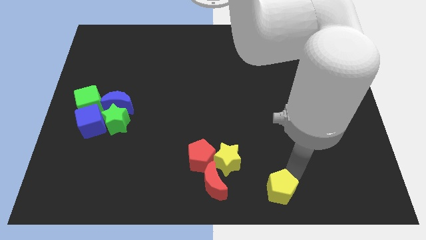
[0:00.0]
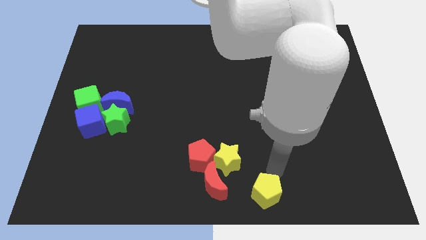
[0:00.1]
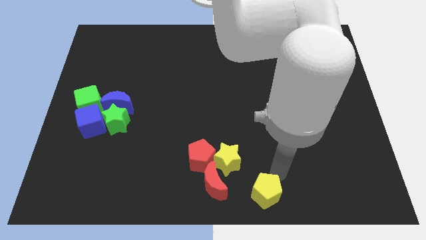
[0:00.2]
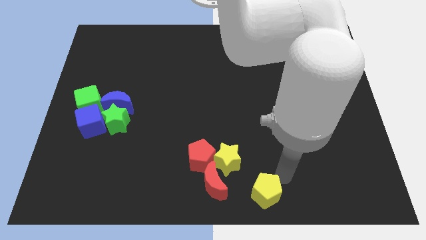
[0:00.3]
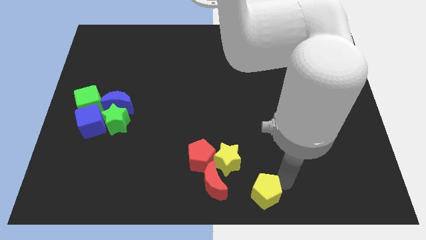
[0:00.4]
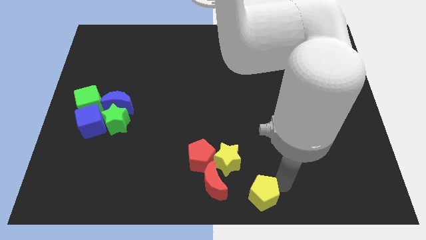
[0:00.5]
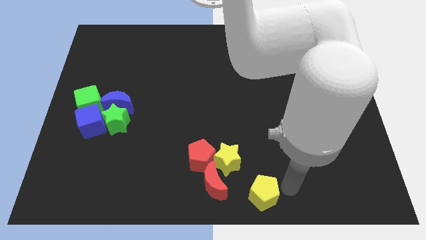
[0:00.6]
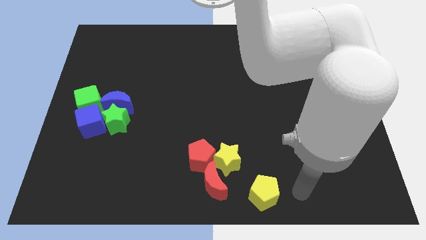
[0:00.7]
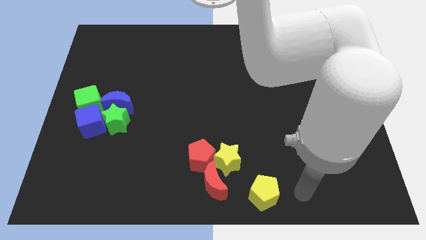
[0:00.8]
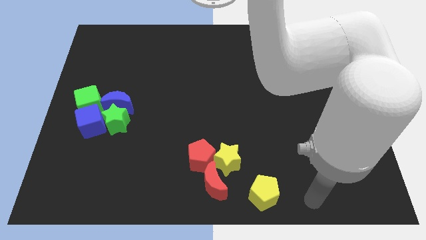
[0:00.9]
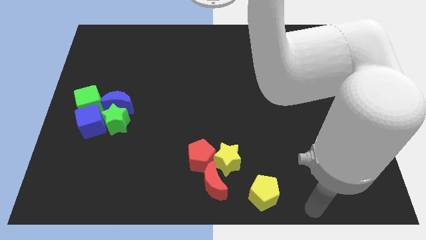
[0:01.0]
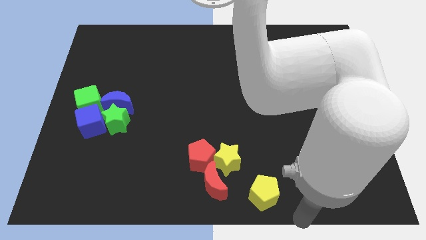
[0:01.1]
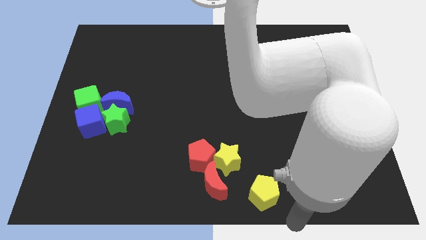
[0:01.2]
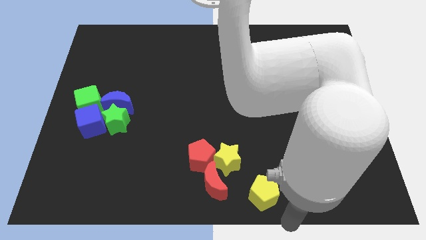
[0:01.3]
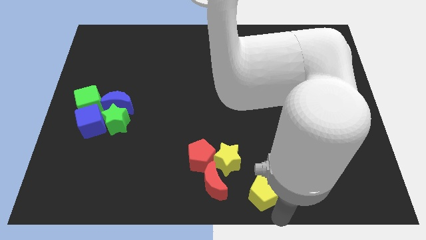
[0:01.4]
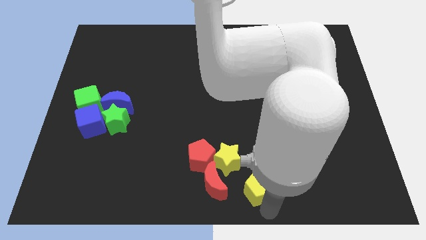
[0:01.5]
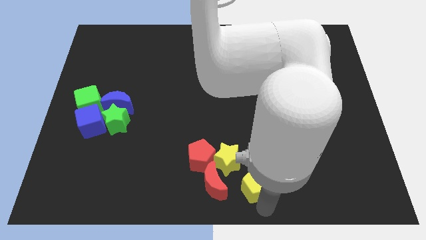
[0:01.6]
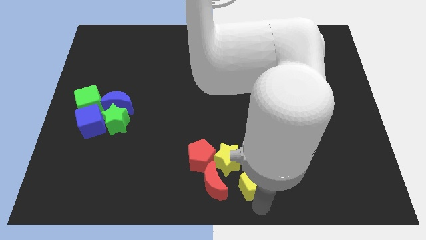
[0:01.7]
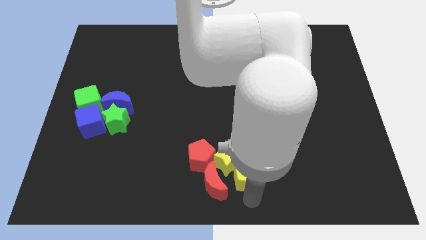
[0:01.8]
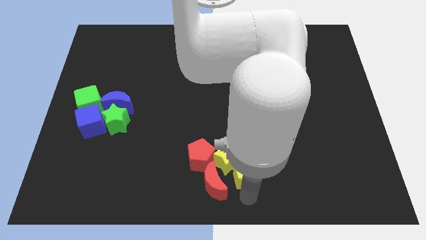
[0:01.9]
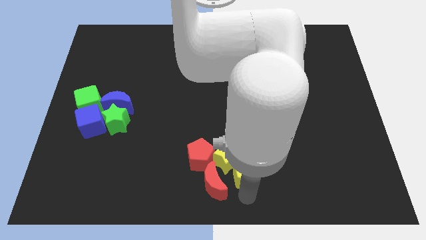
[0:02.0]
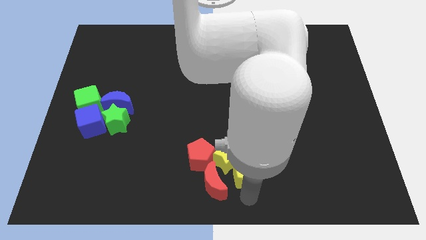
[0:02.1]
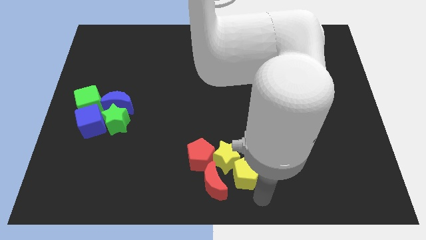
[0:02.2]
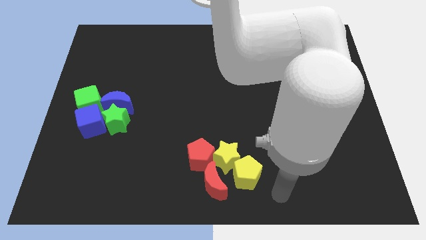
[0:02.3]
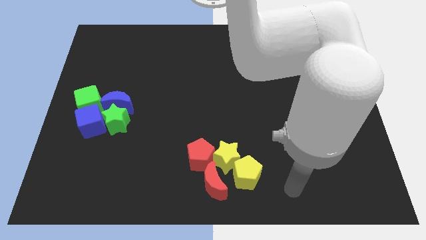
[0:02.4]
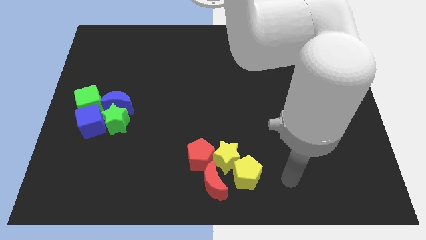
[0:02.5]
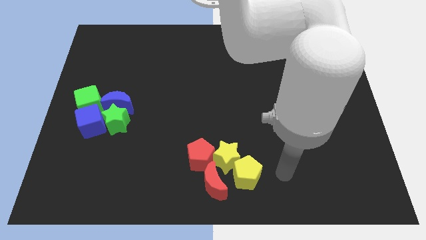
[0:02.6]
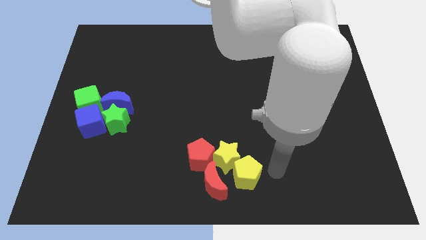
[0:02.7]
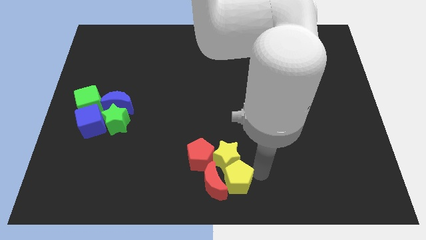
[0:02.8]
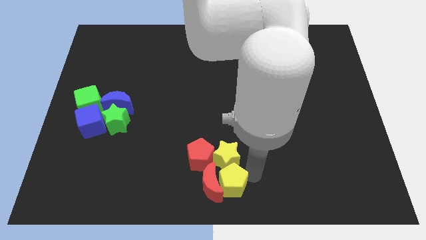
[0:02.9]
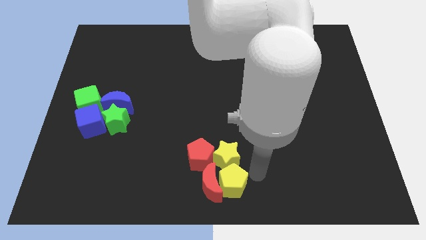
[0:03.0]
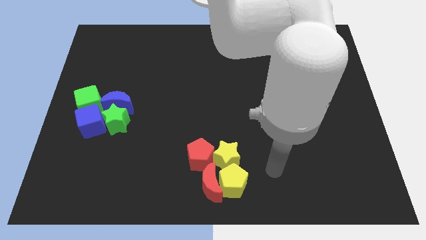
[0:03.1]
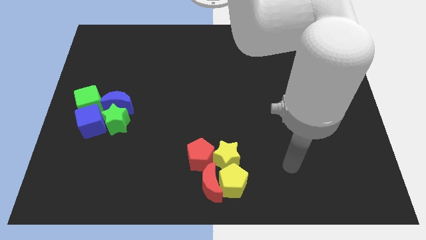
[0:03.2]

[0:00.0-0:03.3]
place yellow pentagon below the yellow star

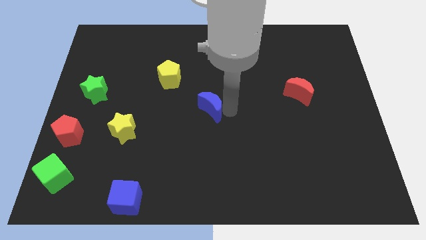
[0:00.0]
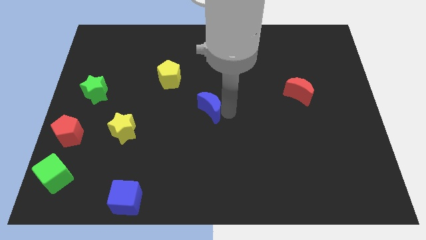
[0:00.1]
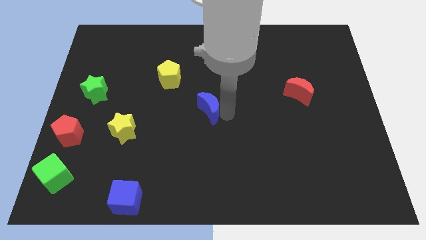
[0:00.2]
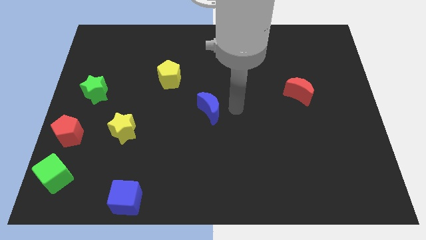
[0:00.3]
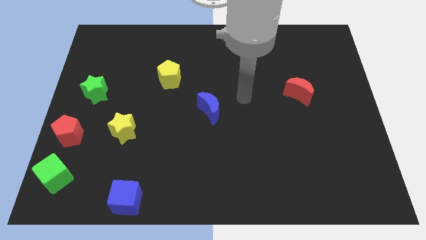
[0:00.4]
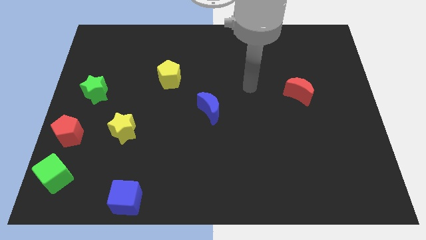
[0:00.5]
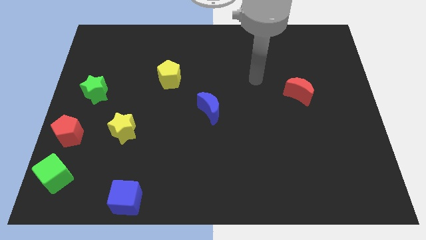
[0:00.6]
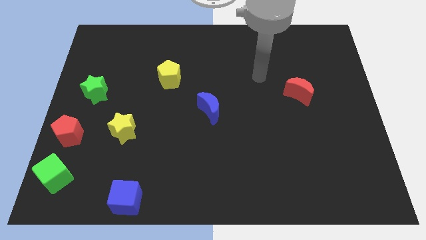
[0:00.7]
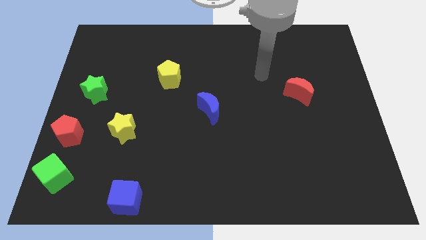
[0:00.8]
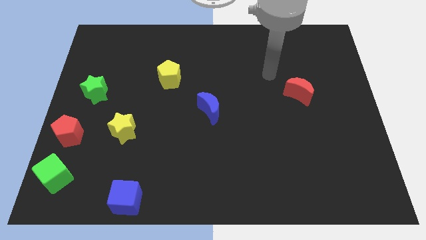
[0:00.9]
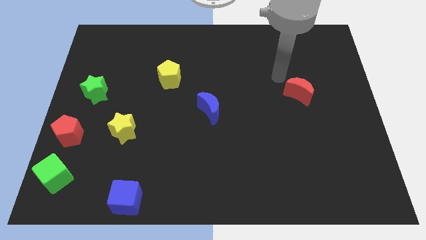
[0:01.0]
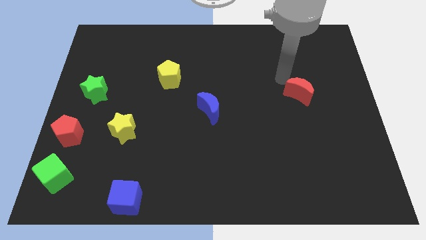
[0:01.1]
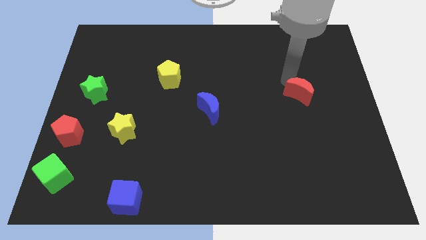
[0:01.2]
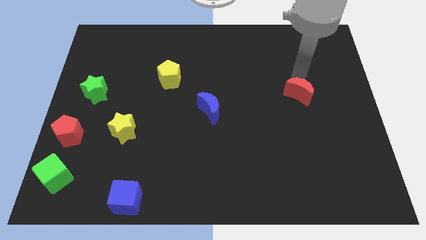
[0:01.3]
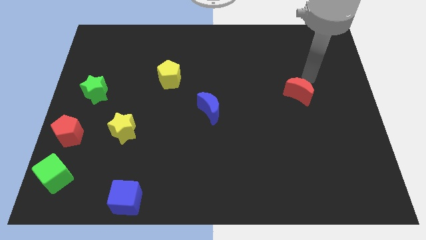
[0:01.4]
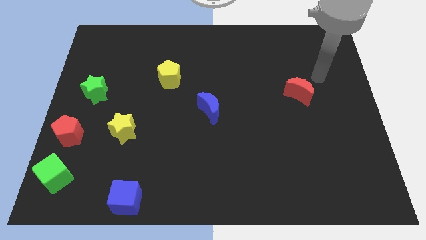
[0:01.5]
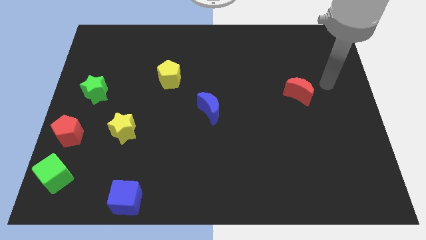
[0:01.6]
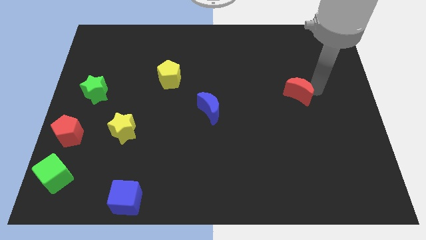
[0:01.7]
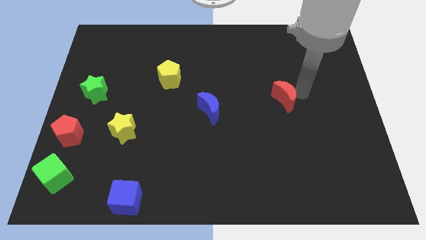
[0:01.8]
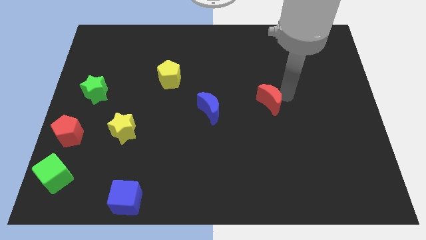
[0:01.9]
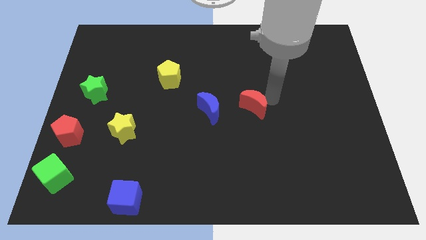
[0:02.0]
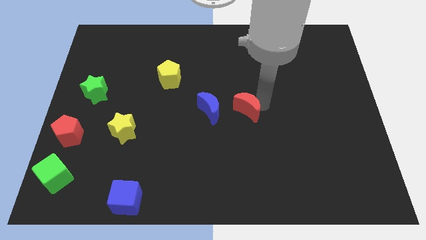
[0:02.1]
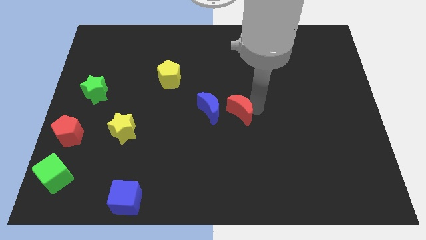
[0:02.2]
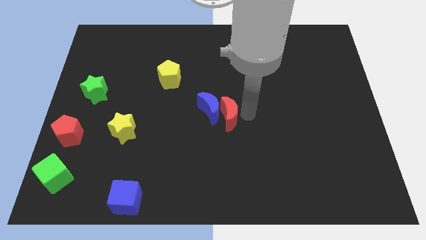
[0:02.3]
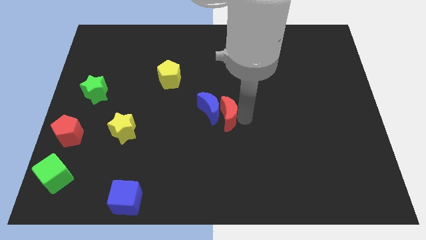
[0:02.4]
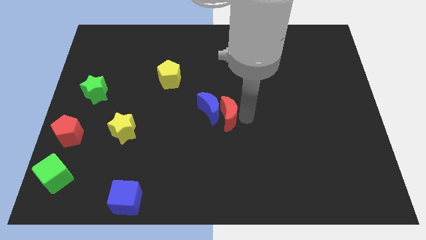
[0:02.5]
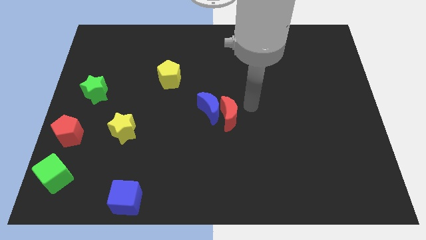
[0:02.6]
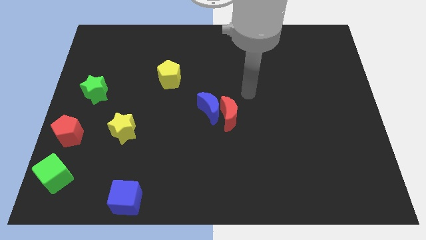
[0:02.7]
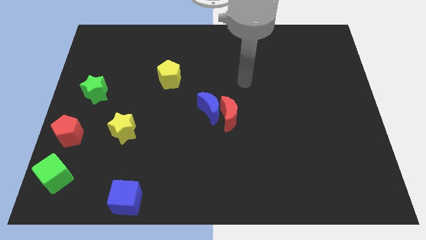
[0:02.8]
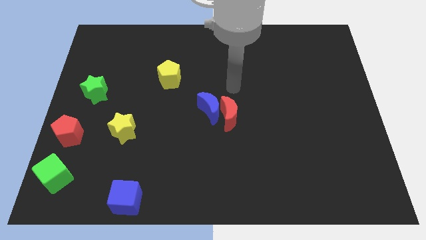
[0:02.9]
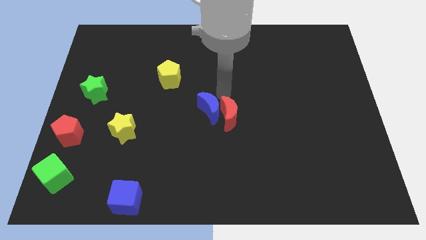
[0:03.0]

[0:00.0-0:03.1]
move the red crescent to the right of the blue crescent to the center of the board

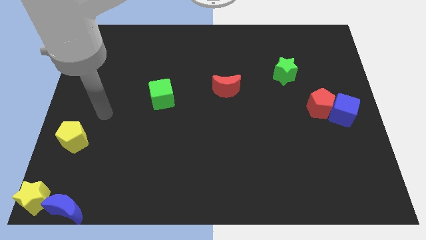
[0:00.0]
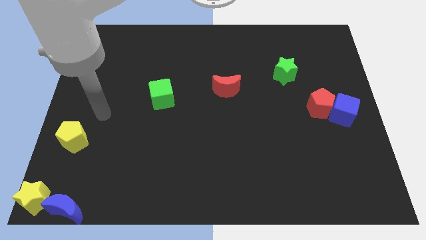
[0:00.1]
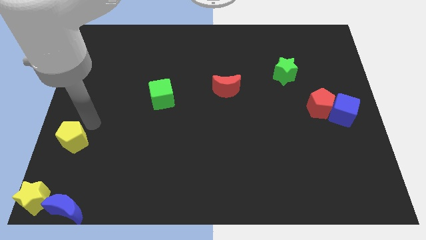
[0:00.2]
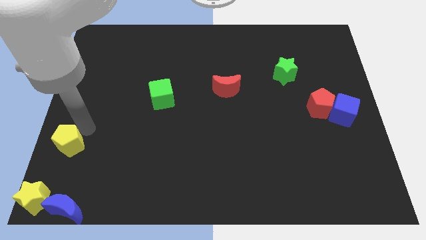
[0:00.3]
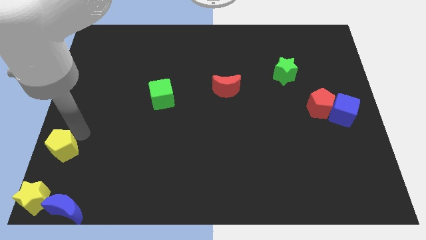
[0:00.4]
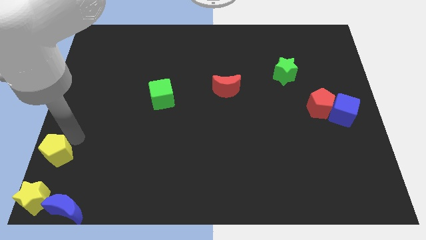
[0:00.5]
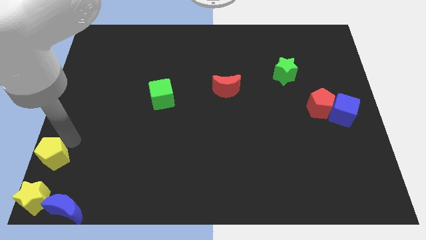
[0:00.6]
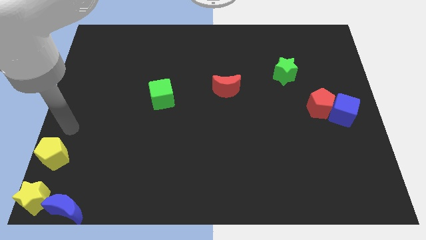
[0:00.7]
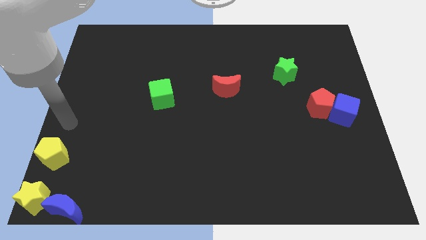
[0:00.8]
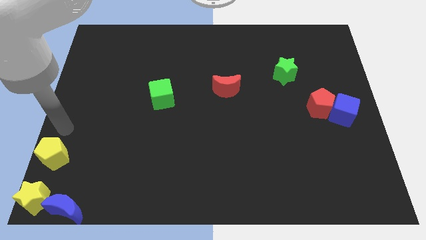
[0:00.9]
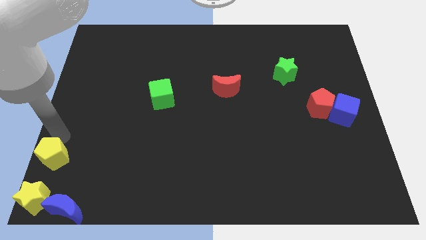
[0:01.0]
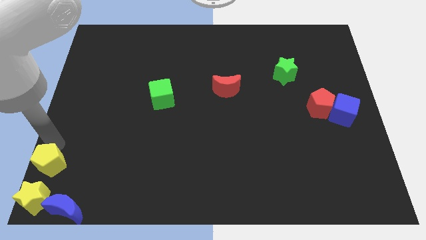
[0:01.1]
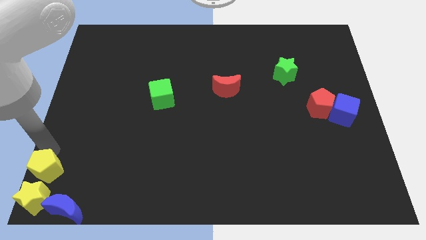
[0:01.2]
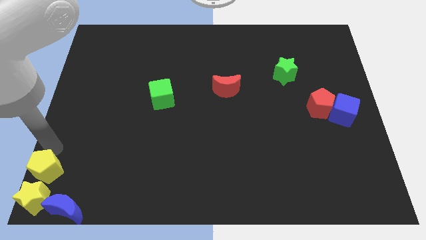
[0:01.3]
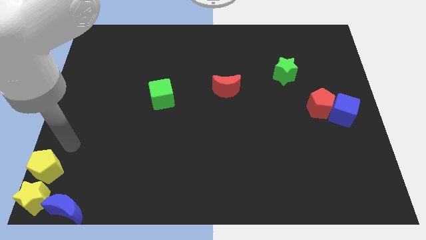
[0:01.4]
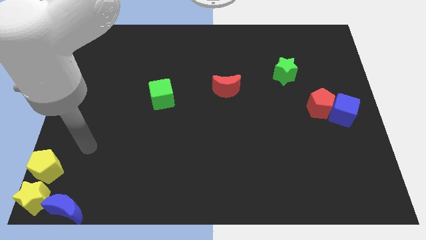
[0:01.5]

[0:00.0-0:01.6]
push the yellow pentagon to the top of yellow star

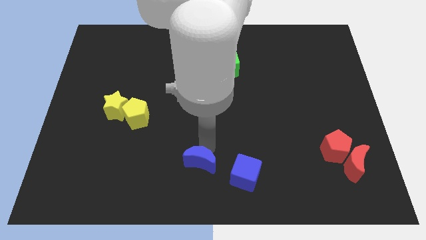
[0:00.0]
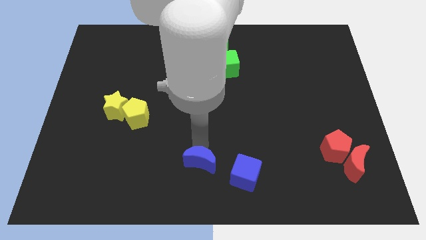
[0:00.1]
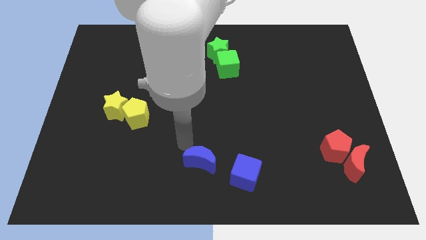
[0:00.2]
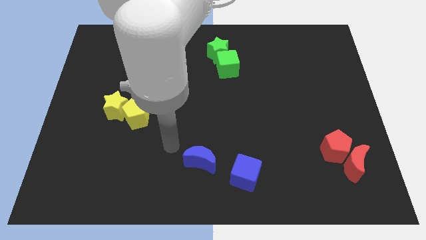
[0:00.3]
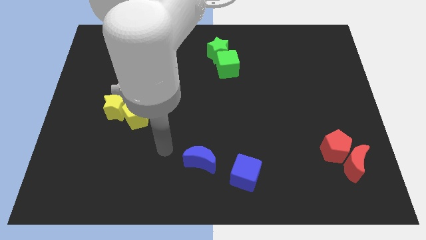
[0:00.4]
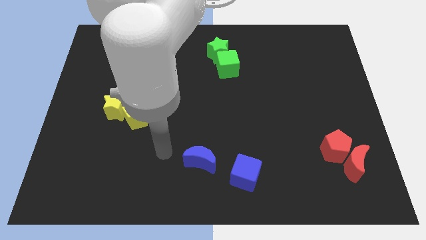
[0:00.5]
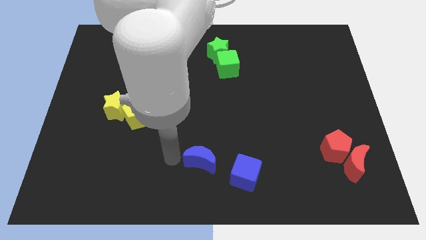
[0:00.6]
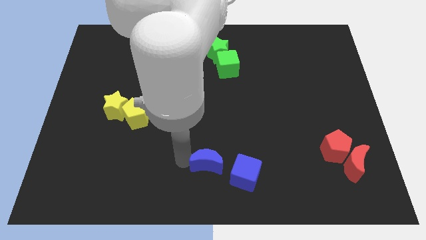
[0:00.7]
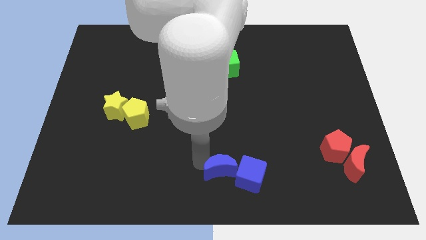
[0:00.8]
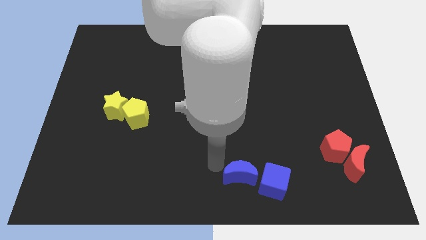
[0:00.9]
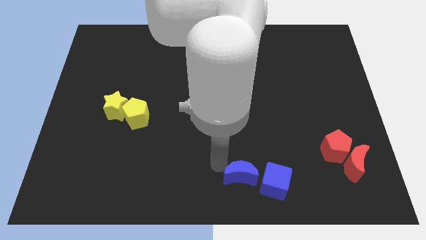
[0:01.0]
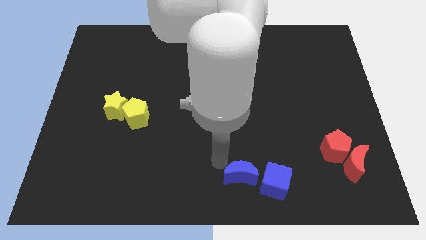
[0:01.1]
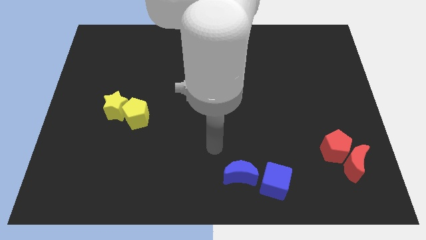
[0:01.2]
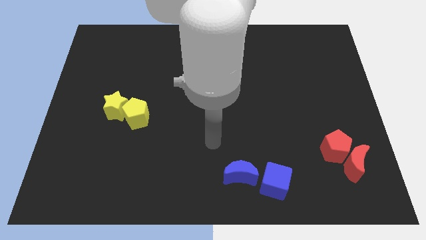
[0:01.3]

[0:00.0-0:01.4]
move blue crescent to the left of the blue cube
